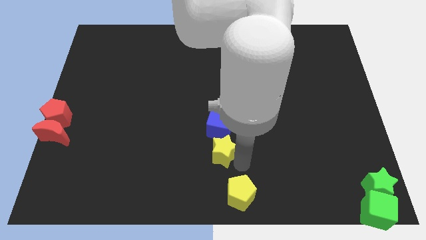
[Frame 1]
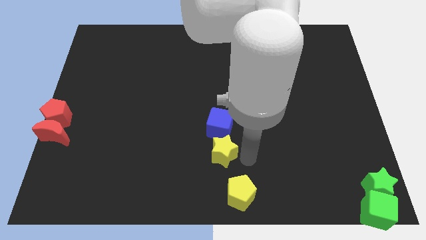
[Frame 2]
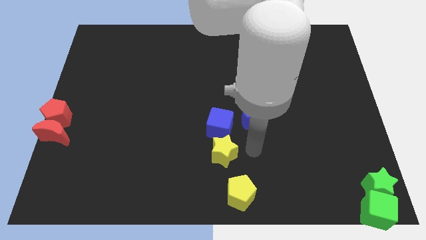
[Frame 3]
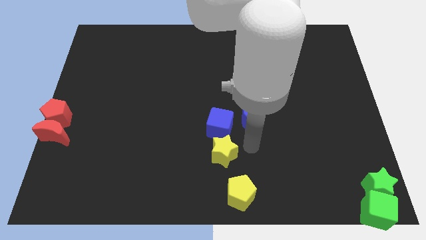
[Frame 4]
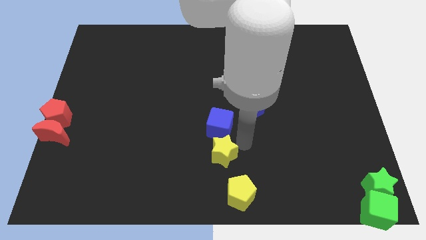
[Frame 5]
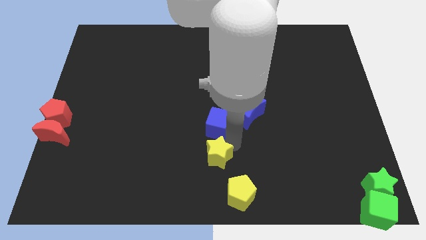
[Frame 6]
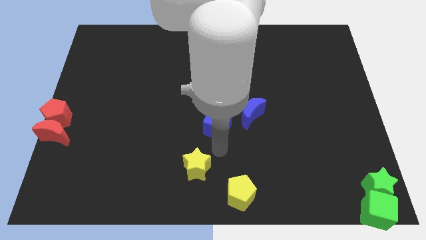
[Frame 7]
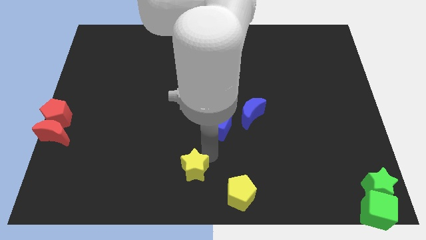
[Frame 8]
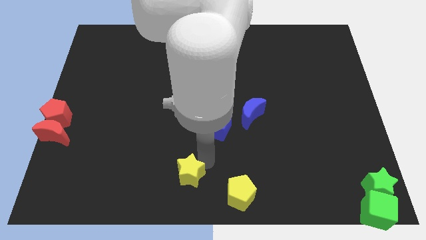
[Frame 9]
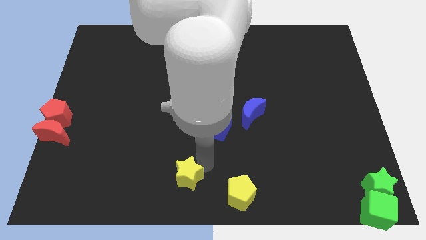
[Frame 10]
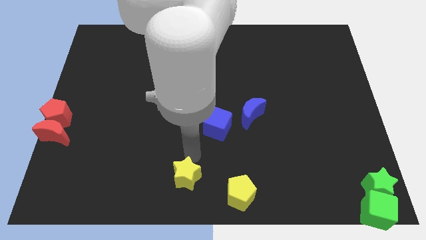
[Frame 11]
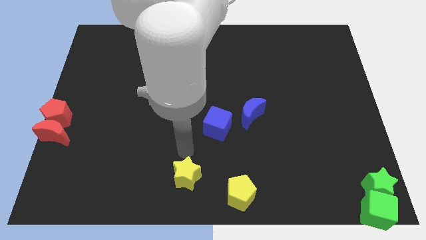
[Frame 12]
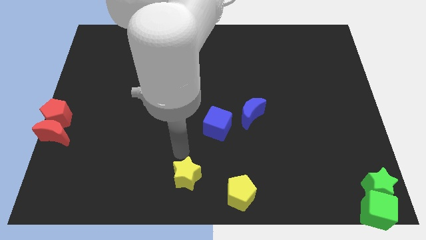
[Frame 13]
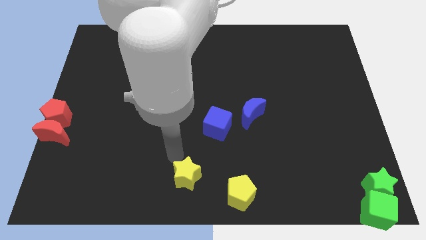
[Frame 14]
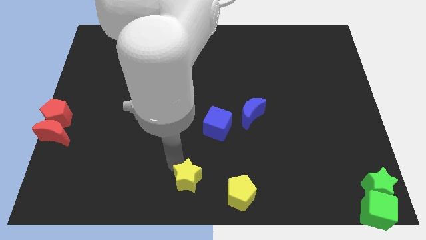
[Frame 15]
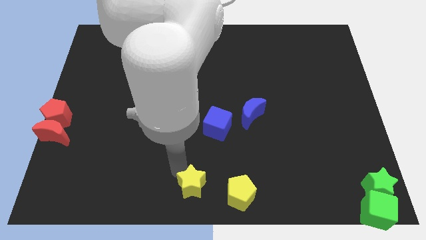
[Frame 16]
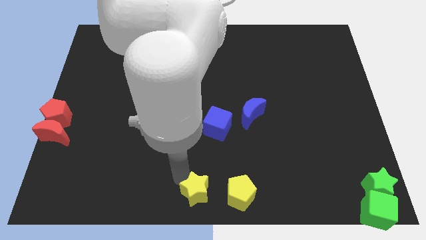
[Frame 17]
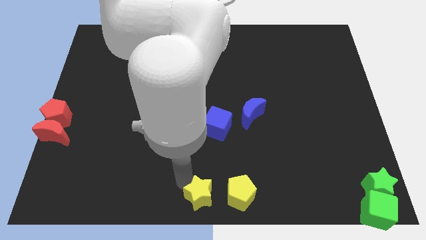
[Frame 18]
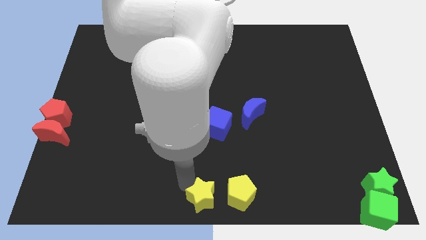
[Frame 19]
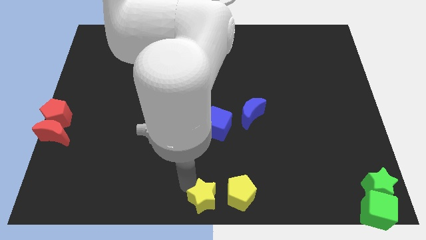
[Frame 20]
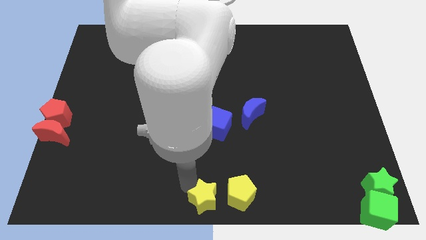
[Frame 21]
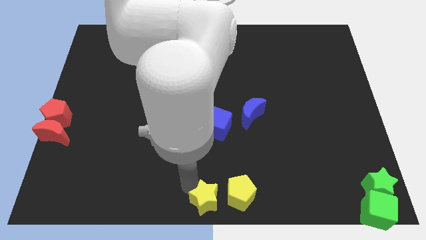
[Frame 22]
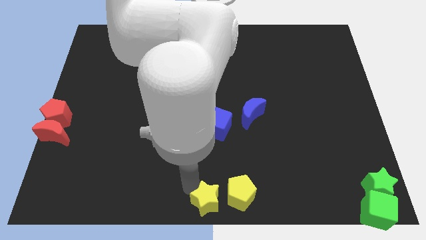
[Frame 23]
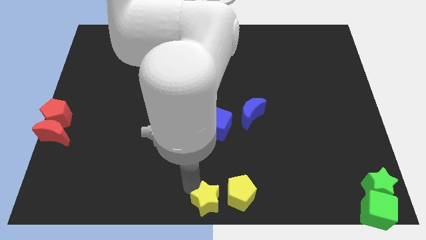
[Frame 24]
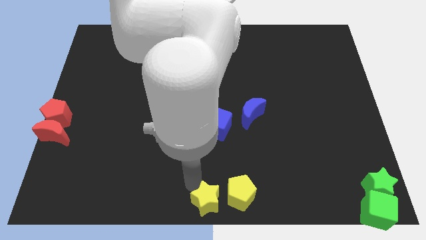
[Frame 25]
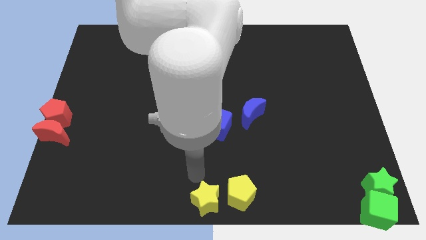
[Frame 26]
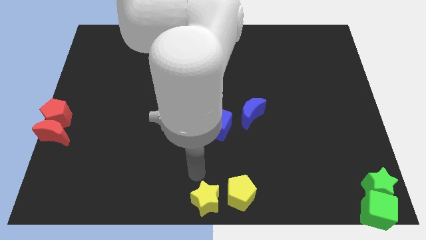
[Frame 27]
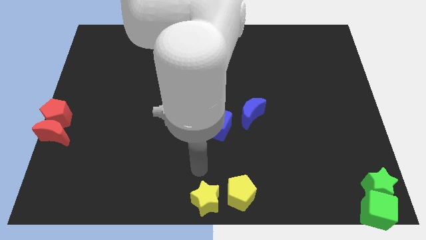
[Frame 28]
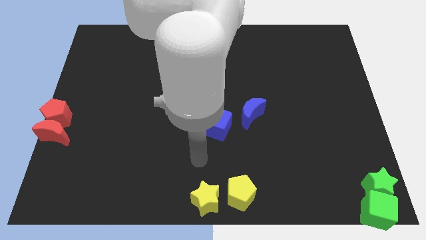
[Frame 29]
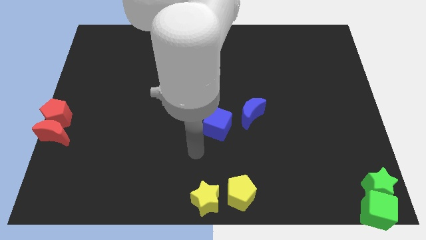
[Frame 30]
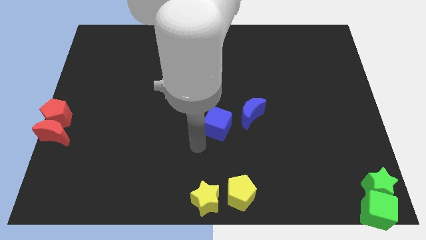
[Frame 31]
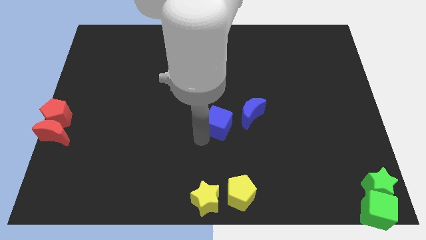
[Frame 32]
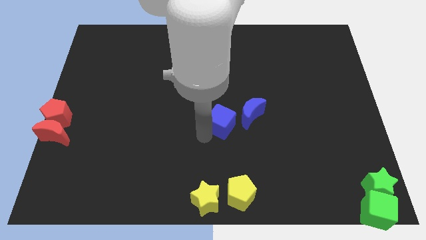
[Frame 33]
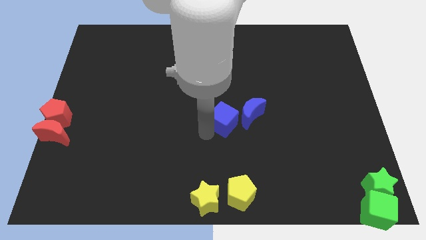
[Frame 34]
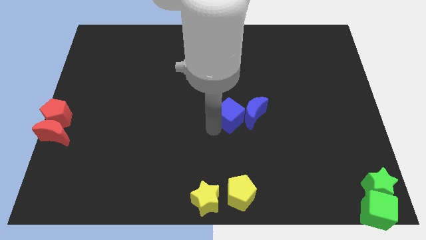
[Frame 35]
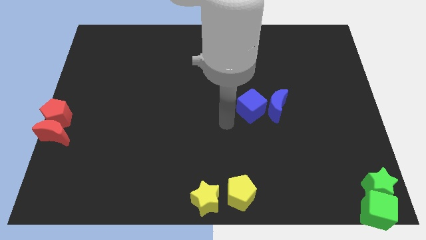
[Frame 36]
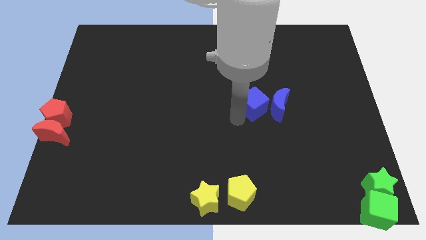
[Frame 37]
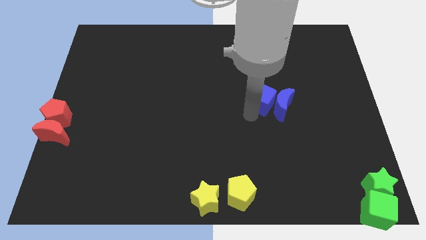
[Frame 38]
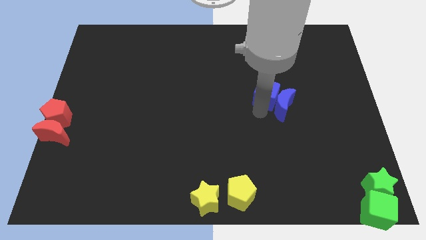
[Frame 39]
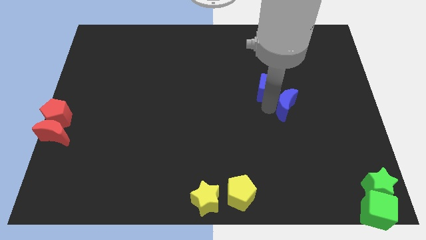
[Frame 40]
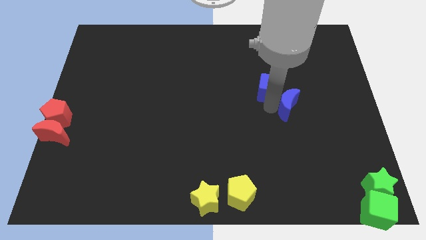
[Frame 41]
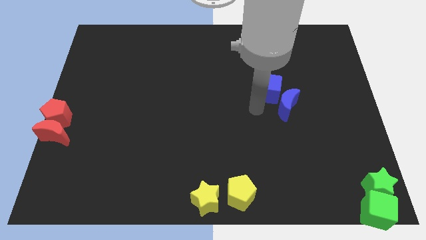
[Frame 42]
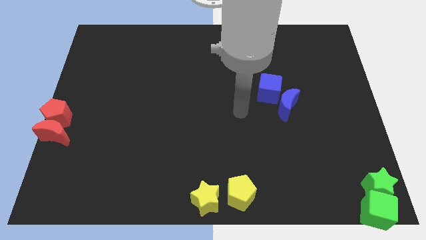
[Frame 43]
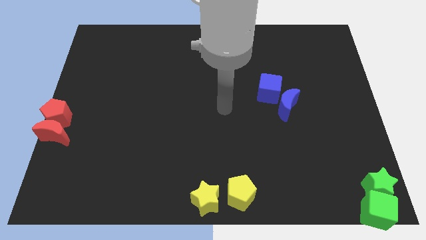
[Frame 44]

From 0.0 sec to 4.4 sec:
push yellow star to the bottom center of the board

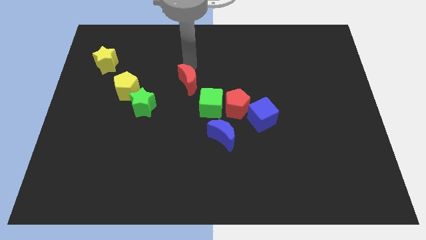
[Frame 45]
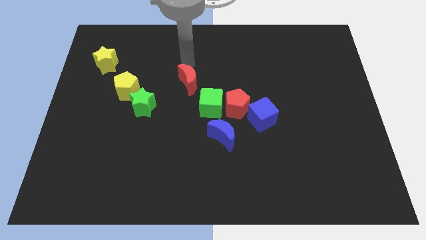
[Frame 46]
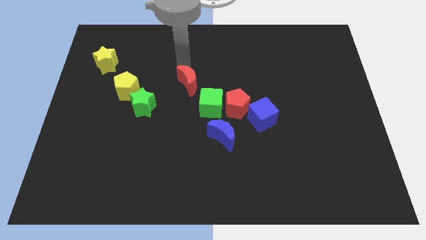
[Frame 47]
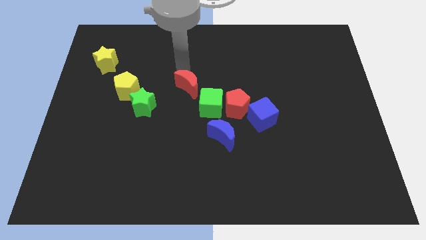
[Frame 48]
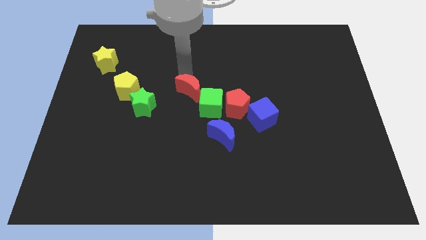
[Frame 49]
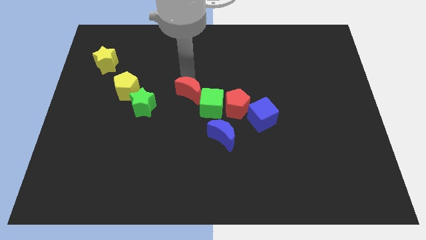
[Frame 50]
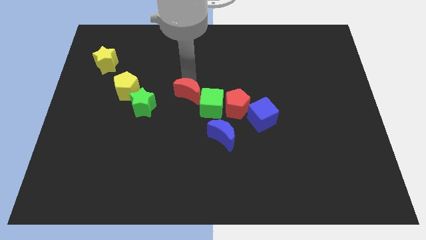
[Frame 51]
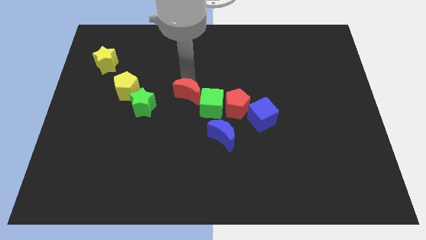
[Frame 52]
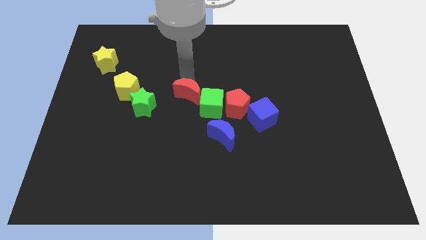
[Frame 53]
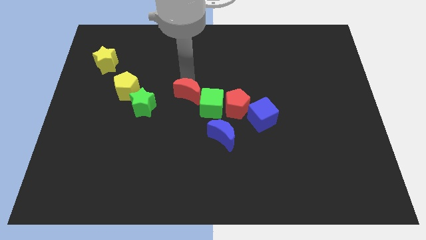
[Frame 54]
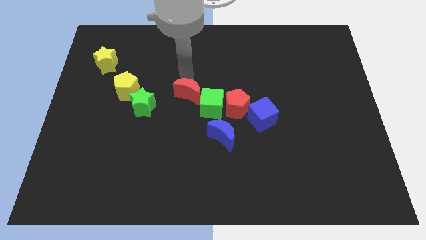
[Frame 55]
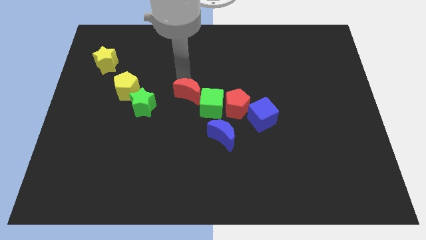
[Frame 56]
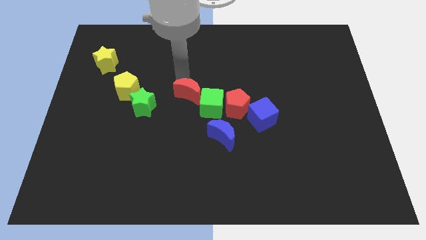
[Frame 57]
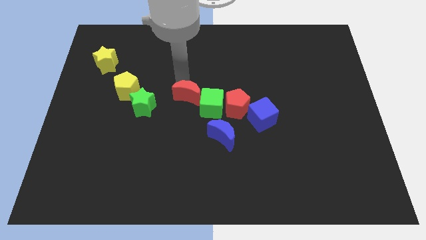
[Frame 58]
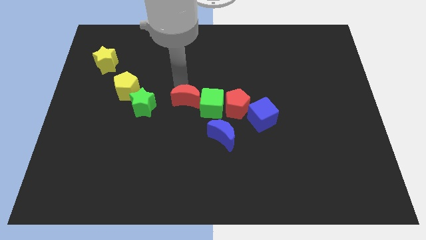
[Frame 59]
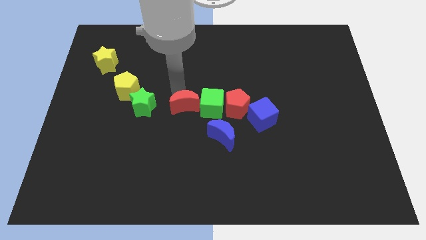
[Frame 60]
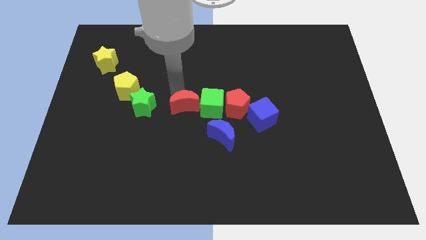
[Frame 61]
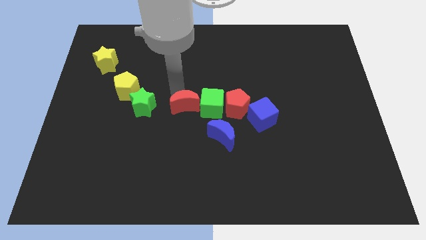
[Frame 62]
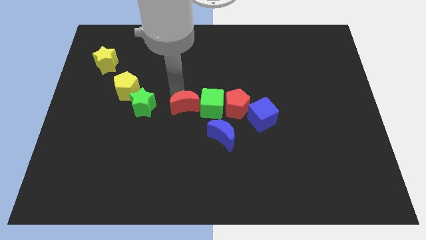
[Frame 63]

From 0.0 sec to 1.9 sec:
place the red moon to the left of the green cube

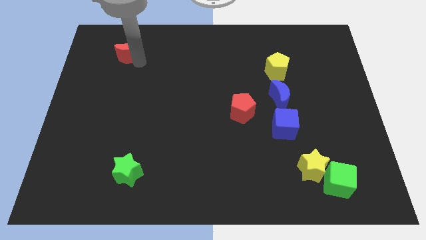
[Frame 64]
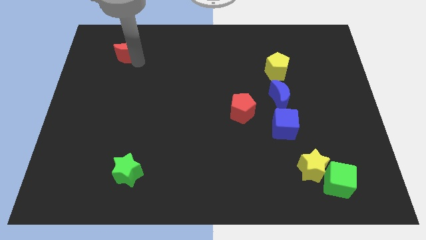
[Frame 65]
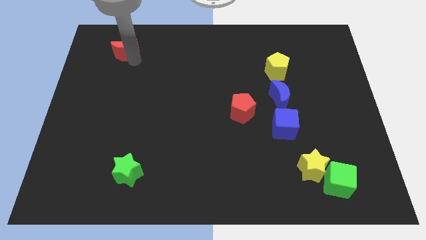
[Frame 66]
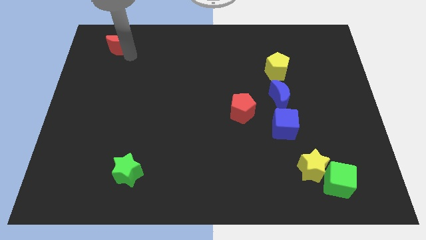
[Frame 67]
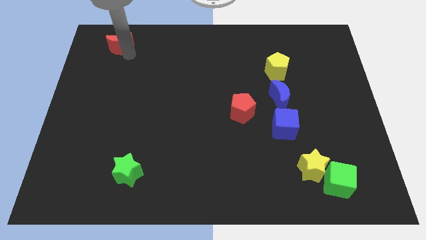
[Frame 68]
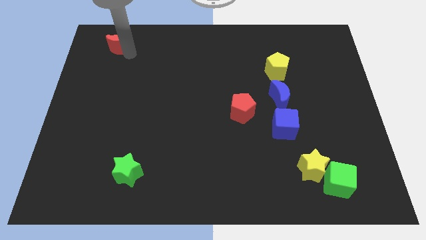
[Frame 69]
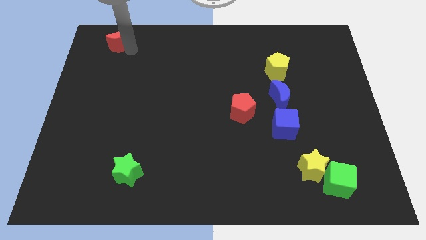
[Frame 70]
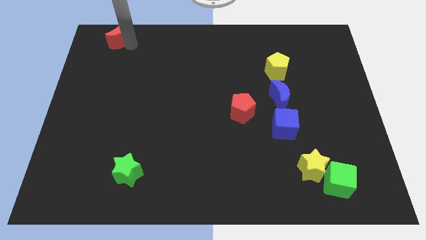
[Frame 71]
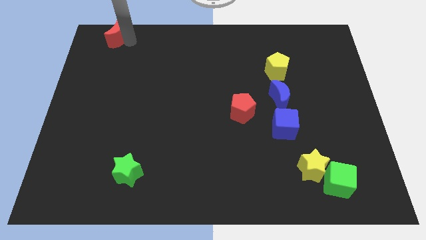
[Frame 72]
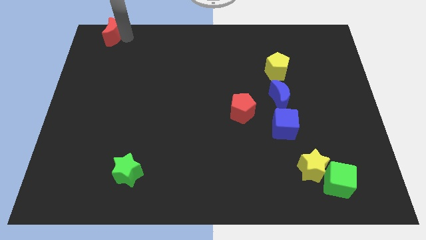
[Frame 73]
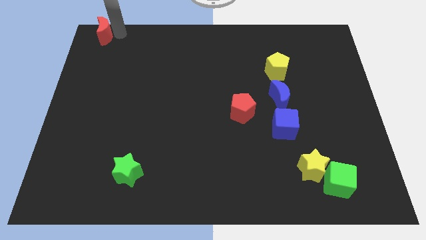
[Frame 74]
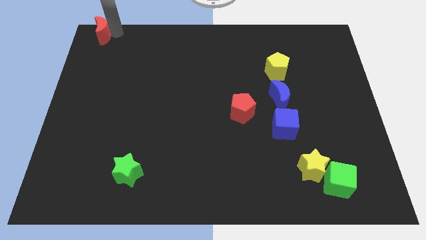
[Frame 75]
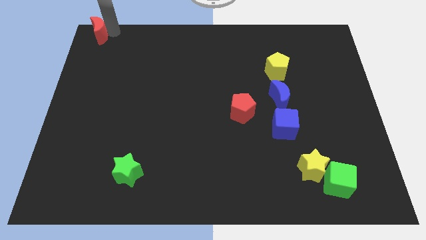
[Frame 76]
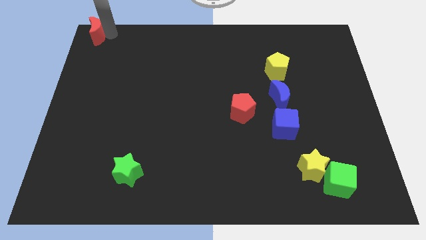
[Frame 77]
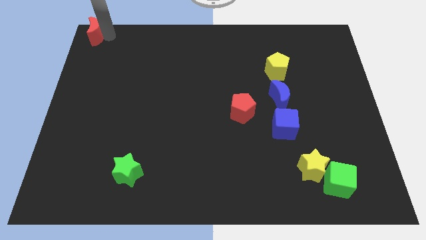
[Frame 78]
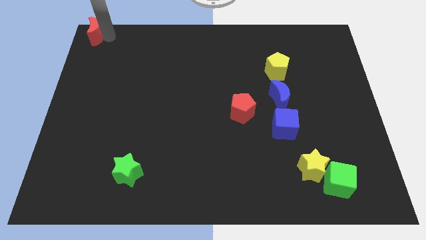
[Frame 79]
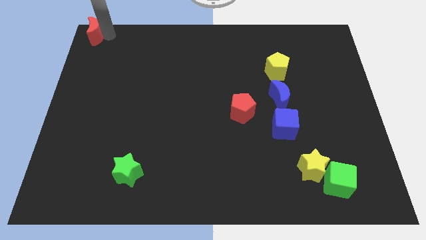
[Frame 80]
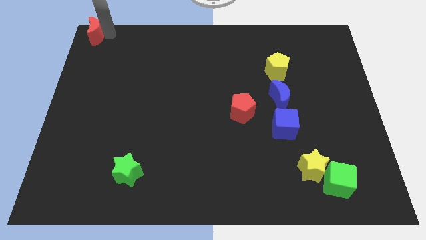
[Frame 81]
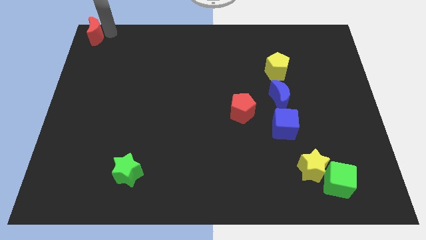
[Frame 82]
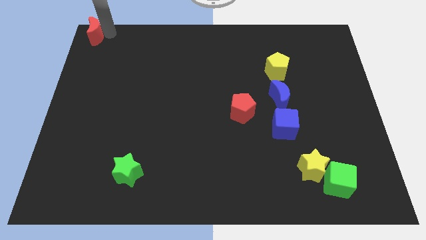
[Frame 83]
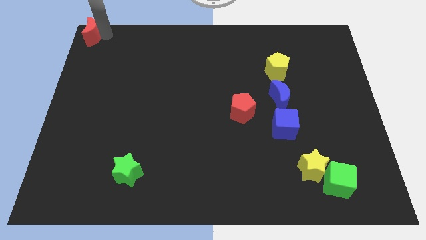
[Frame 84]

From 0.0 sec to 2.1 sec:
place the red crescent at the top left corner of the board

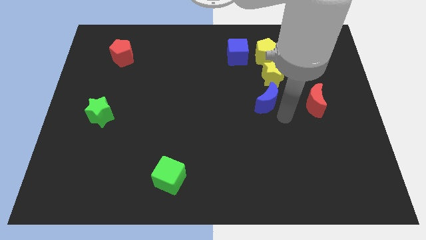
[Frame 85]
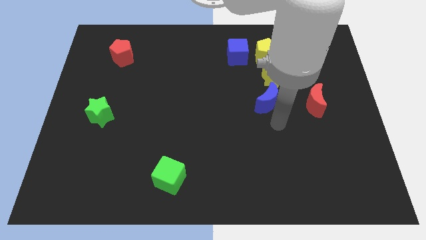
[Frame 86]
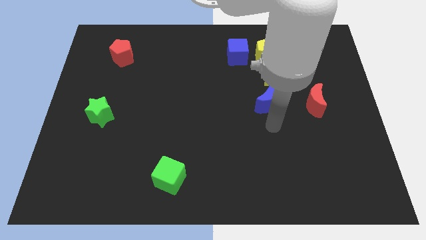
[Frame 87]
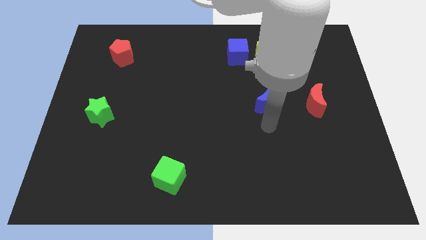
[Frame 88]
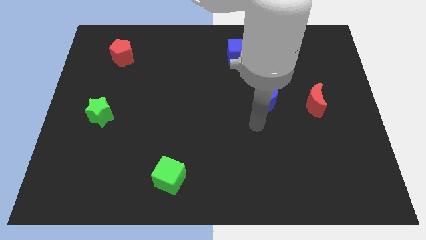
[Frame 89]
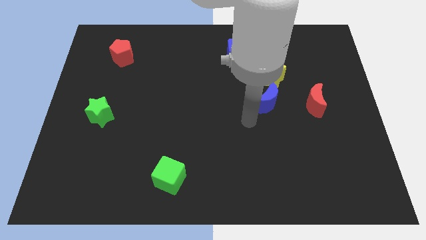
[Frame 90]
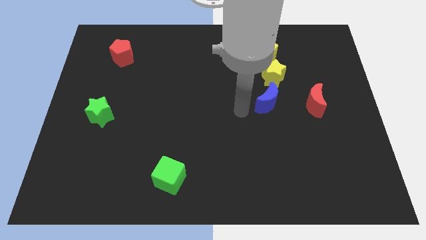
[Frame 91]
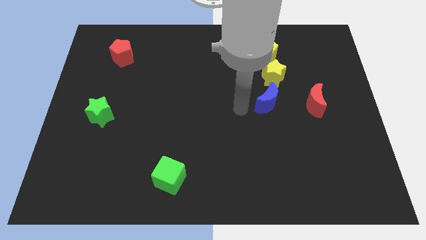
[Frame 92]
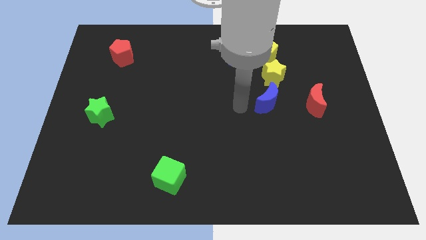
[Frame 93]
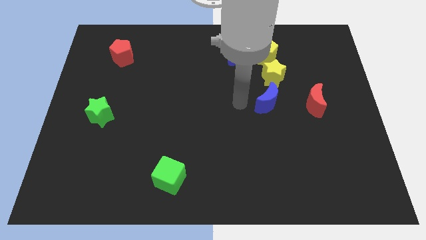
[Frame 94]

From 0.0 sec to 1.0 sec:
move the arm left to the blue crescent

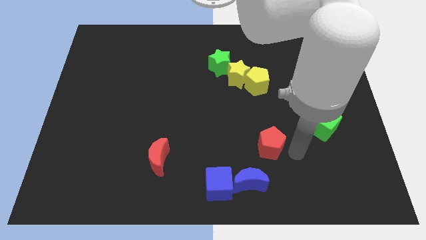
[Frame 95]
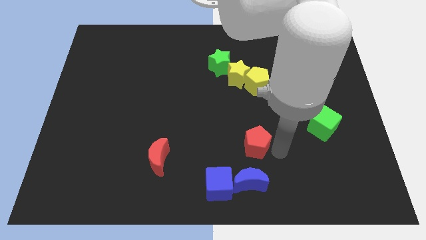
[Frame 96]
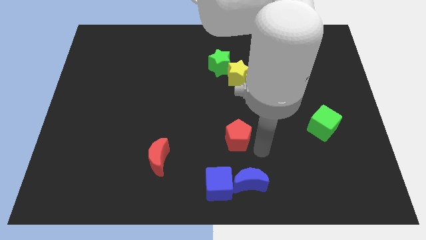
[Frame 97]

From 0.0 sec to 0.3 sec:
move the red pentagon slightly above the blue cube and blue moon
